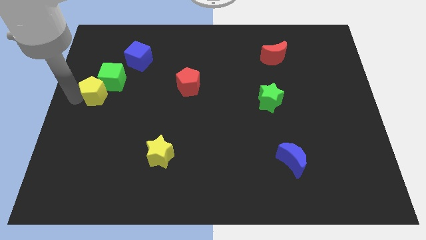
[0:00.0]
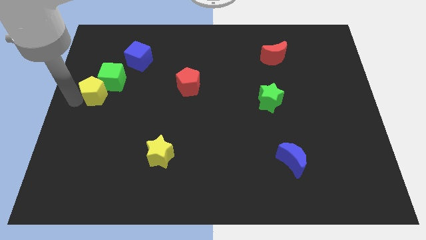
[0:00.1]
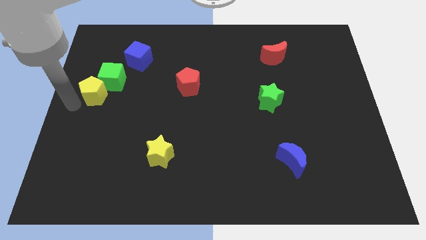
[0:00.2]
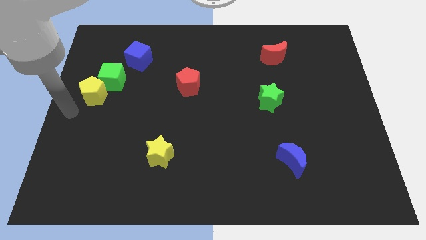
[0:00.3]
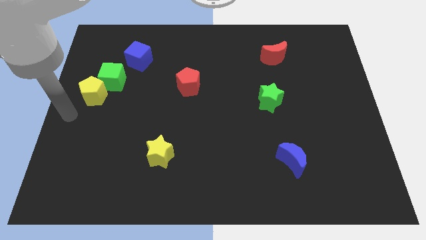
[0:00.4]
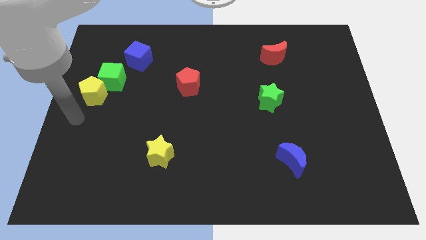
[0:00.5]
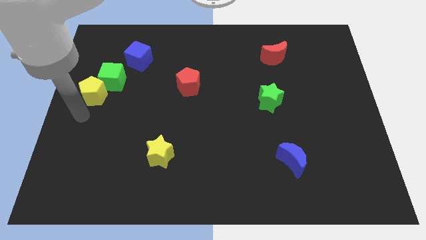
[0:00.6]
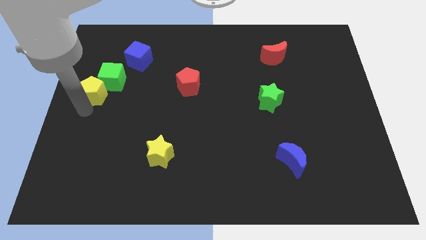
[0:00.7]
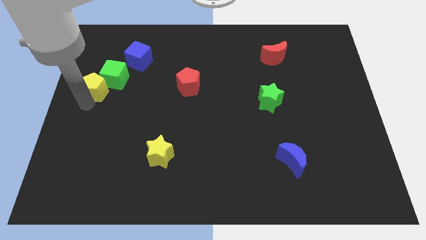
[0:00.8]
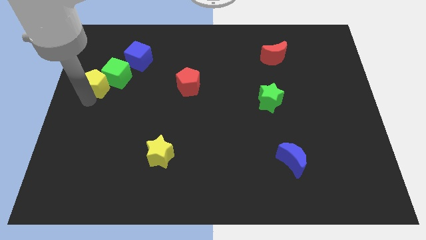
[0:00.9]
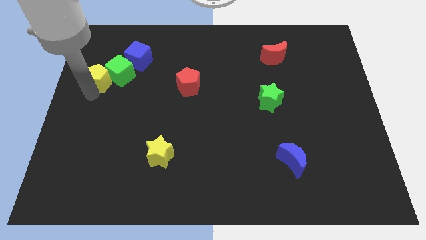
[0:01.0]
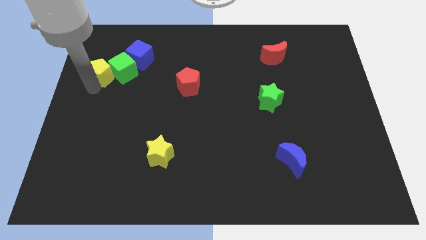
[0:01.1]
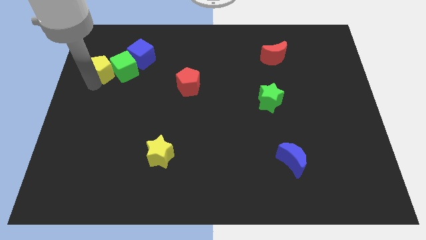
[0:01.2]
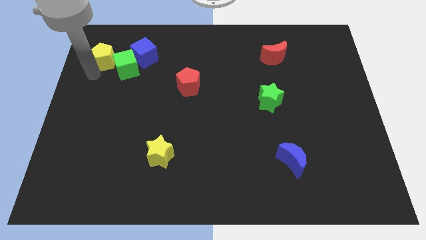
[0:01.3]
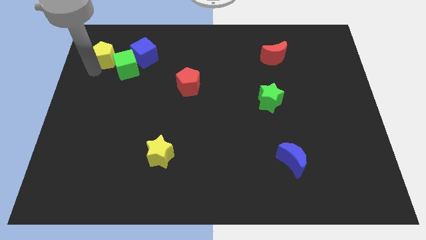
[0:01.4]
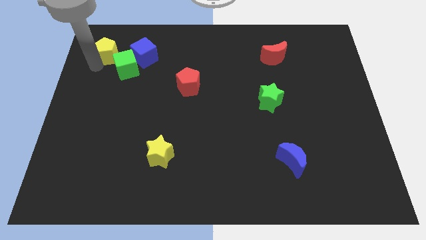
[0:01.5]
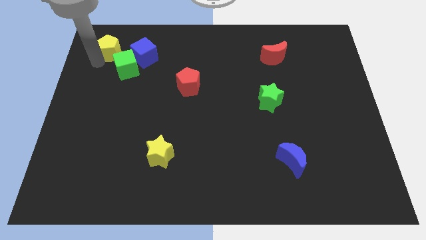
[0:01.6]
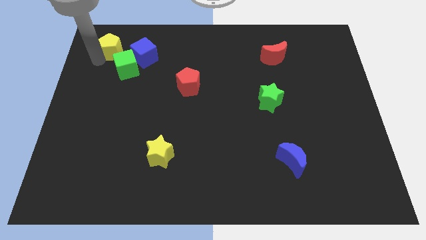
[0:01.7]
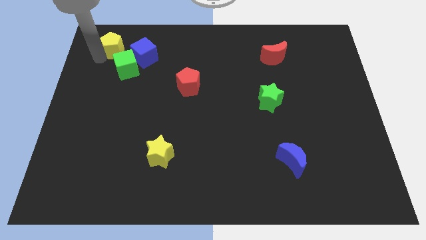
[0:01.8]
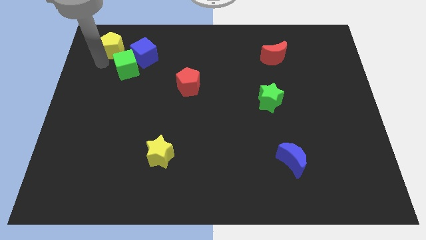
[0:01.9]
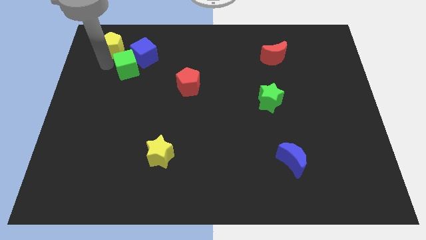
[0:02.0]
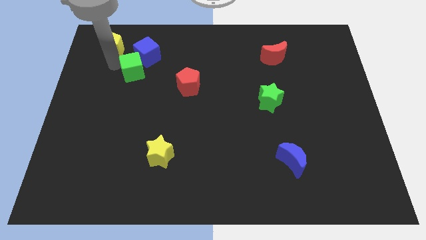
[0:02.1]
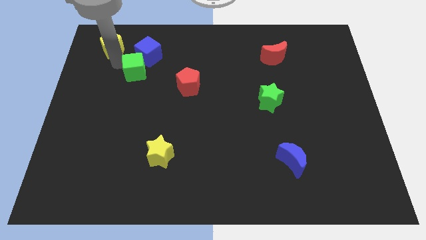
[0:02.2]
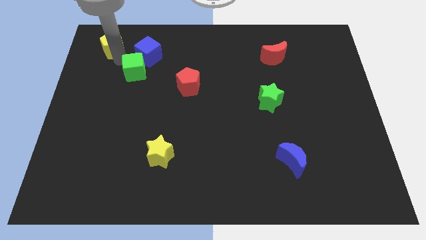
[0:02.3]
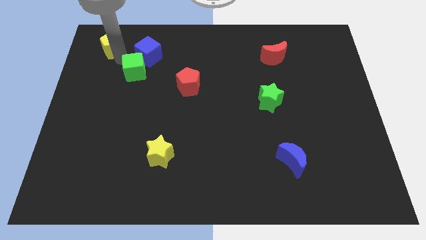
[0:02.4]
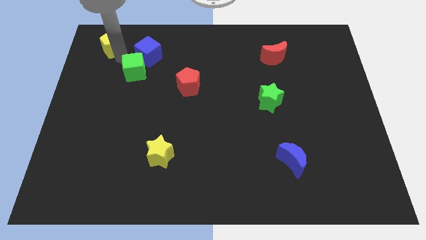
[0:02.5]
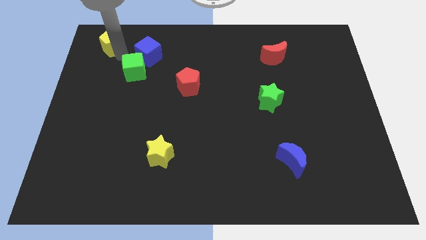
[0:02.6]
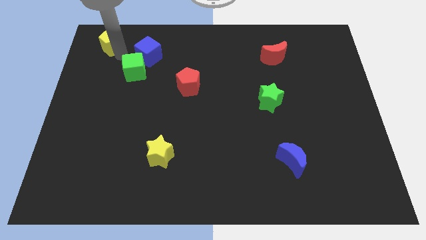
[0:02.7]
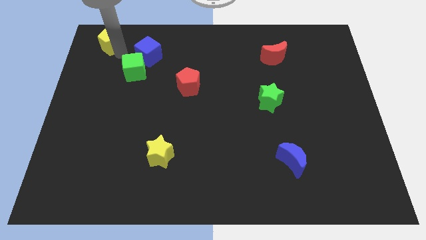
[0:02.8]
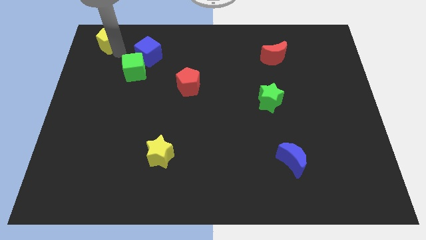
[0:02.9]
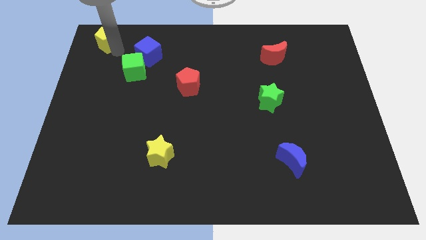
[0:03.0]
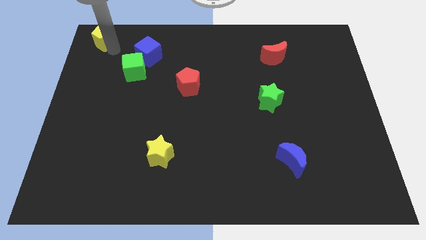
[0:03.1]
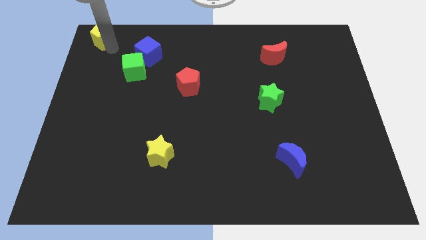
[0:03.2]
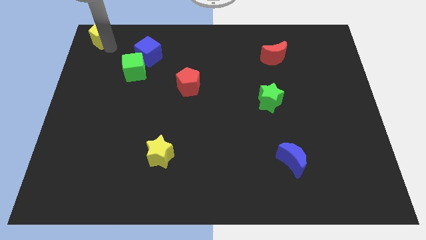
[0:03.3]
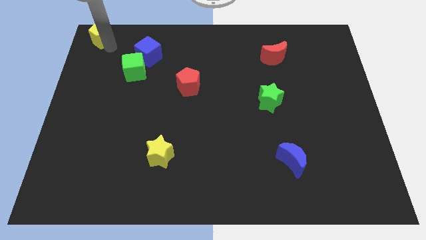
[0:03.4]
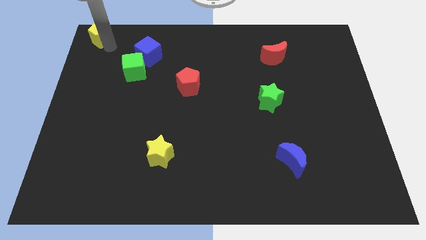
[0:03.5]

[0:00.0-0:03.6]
push the yellow pentagon to the top left corner

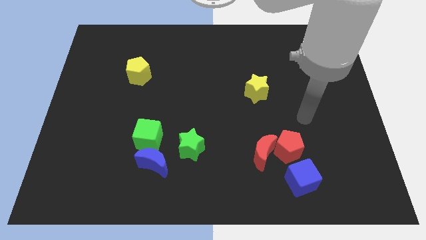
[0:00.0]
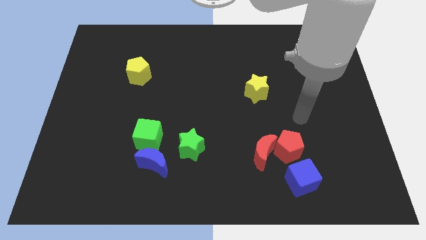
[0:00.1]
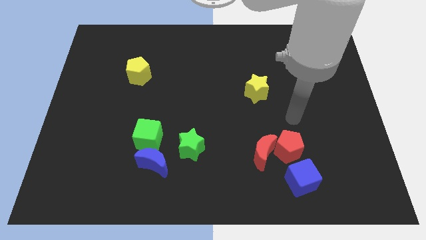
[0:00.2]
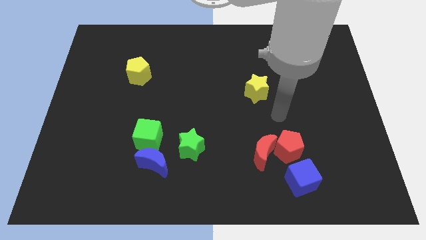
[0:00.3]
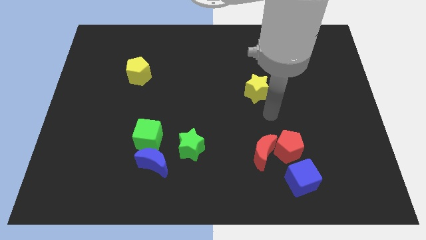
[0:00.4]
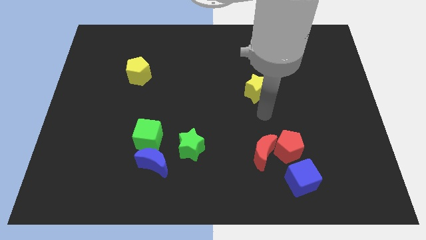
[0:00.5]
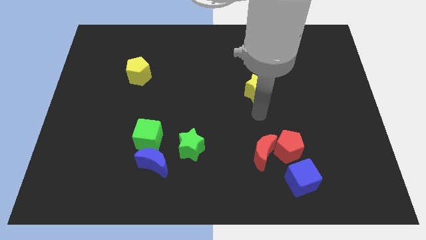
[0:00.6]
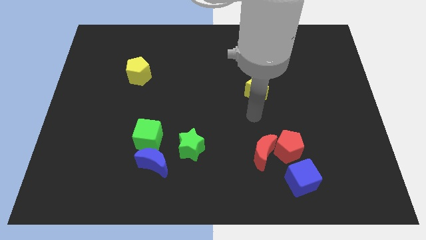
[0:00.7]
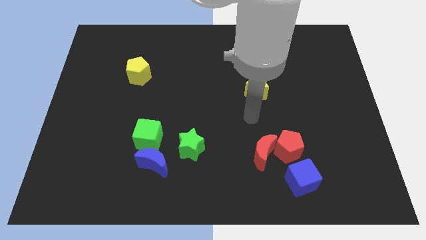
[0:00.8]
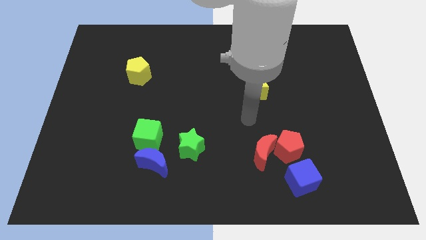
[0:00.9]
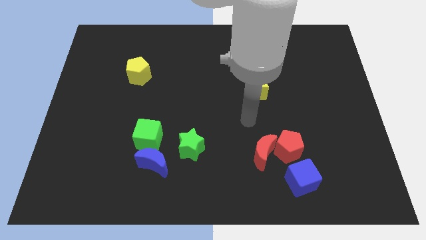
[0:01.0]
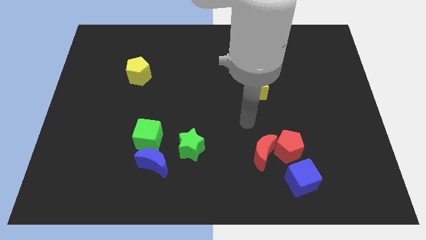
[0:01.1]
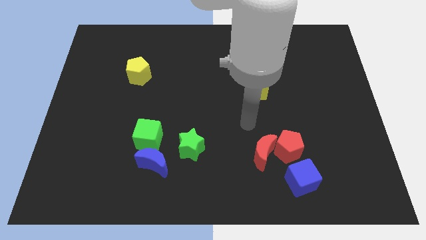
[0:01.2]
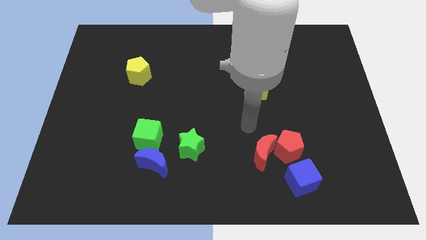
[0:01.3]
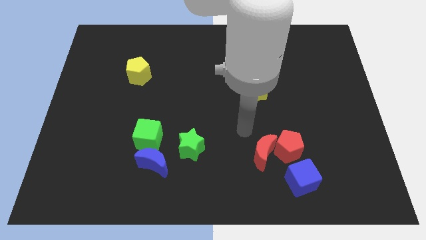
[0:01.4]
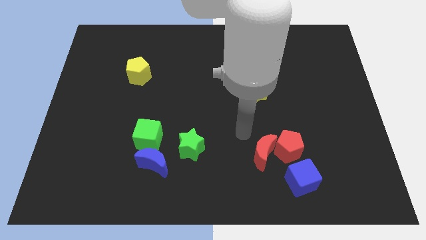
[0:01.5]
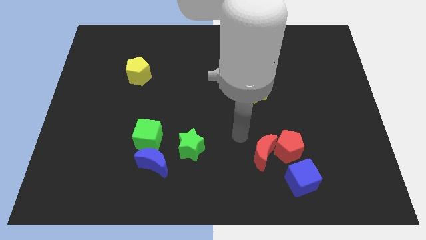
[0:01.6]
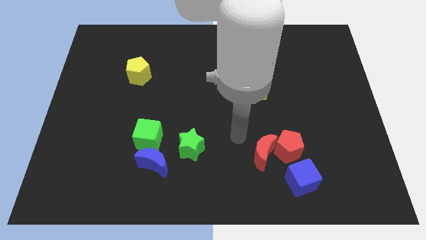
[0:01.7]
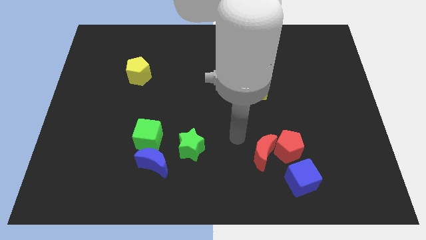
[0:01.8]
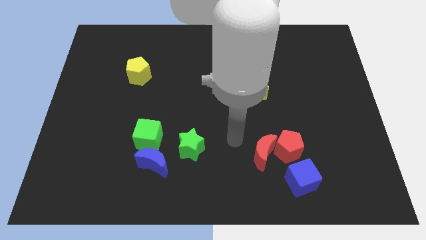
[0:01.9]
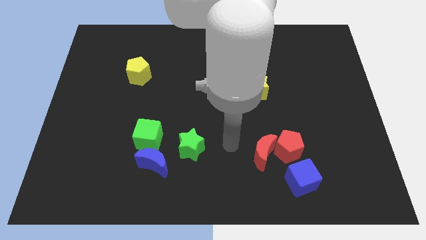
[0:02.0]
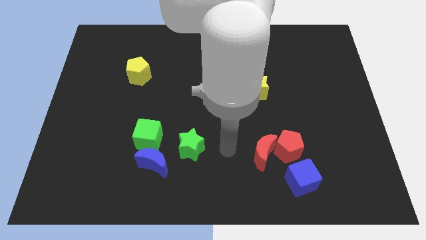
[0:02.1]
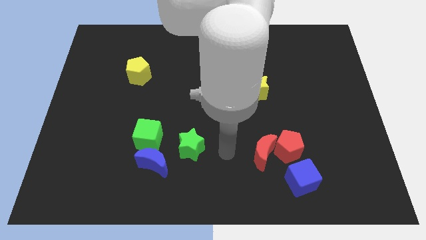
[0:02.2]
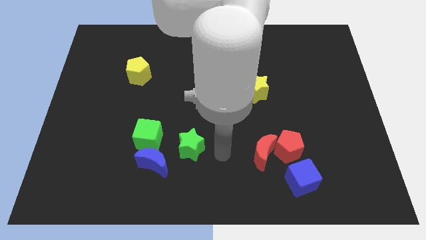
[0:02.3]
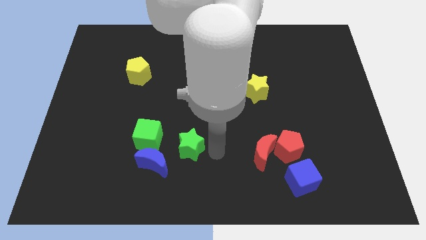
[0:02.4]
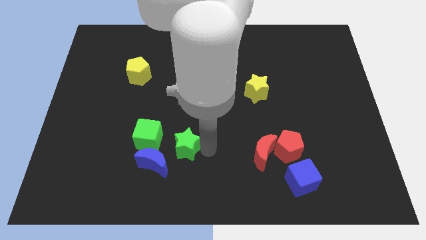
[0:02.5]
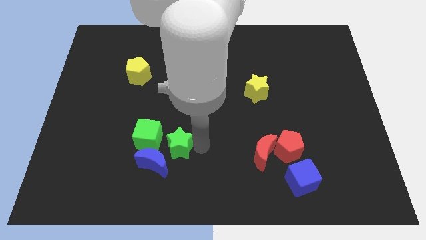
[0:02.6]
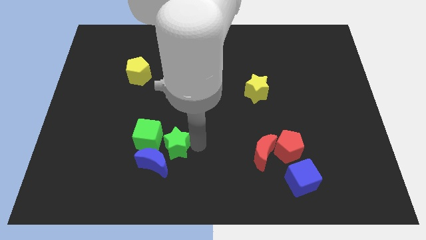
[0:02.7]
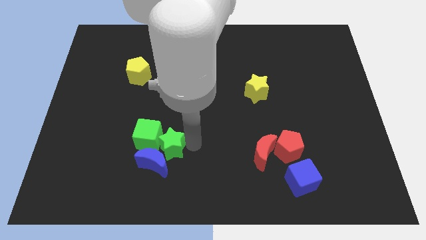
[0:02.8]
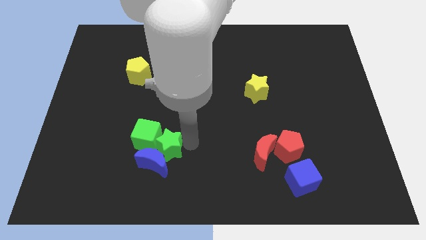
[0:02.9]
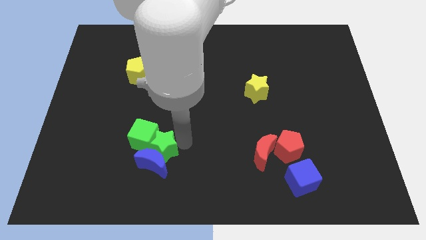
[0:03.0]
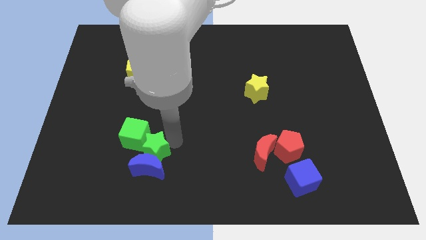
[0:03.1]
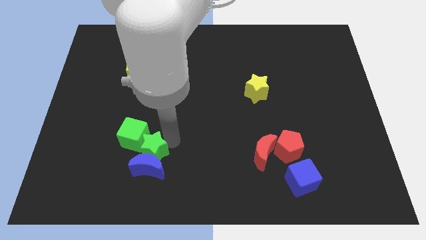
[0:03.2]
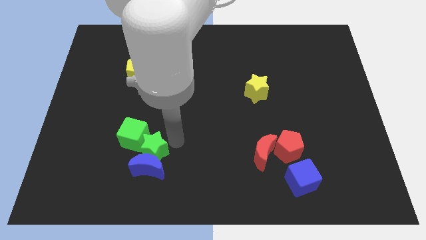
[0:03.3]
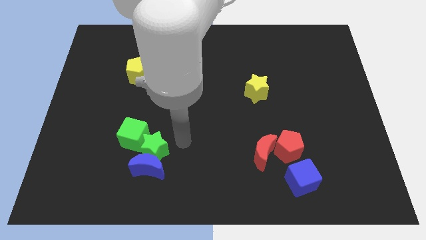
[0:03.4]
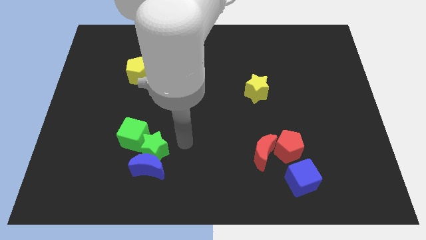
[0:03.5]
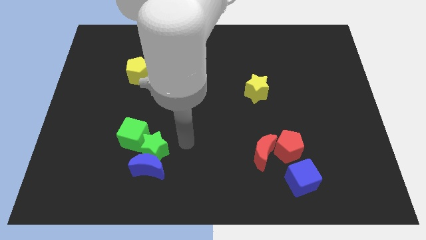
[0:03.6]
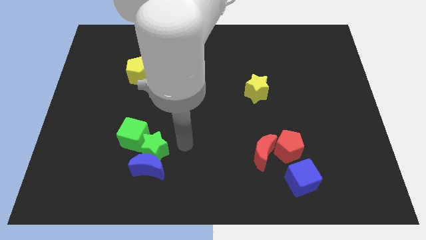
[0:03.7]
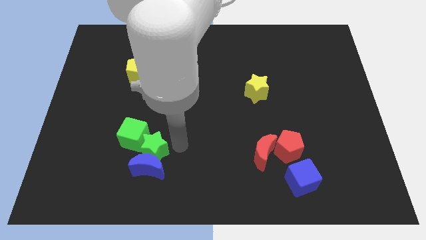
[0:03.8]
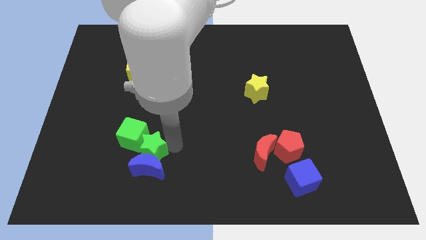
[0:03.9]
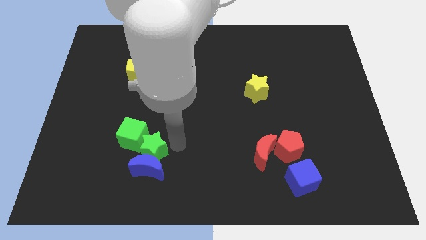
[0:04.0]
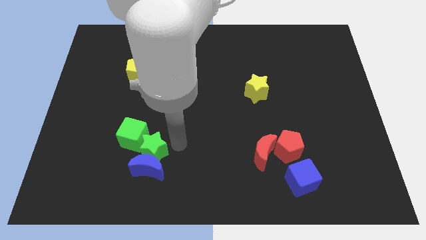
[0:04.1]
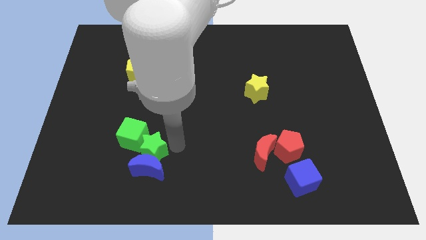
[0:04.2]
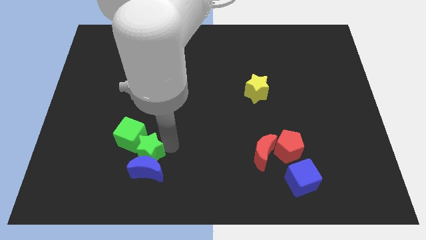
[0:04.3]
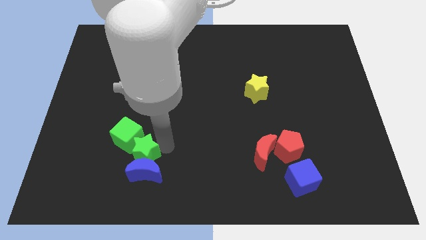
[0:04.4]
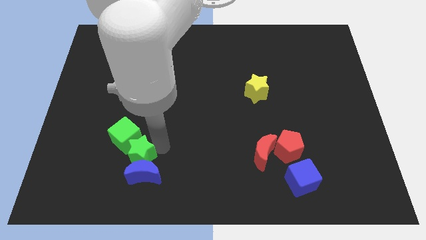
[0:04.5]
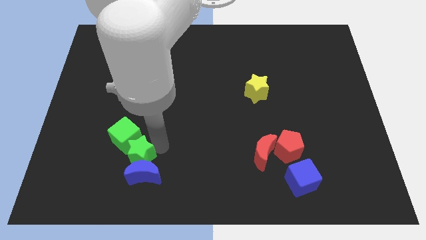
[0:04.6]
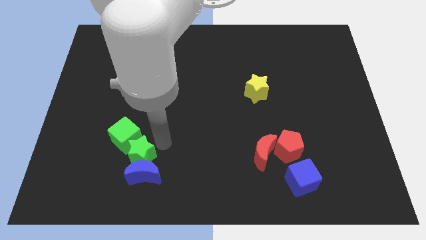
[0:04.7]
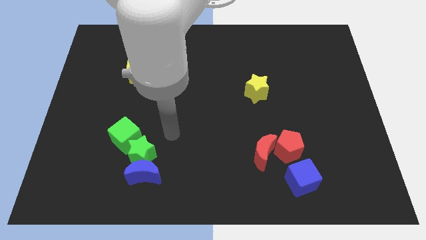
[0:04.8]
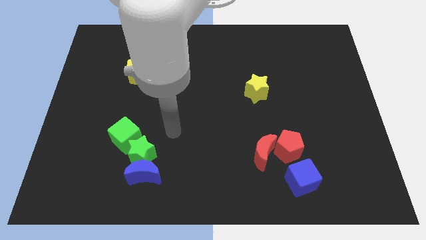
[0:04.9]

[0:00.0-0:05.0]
place the green star to the top side of the blue moon

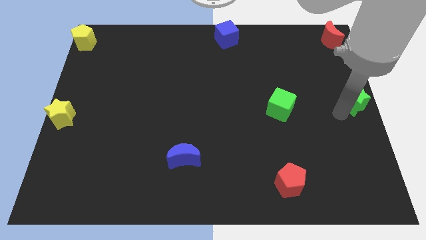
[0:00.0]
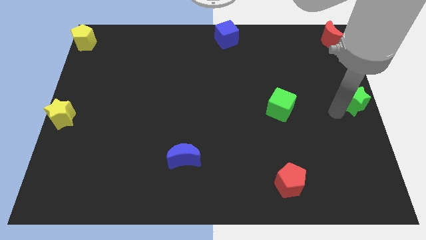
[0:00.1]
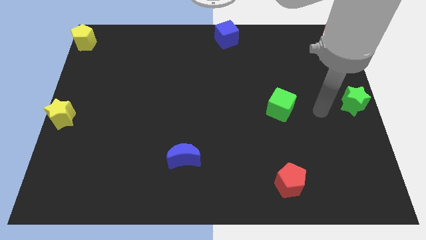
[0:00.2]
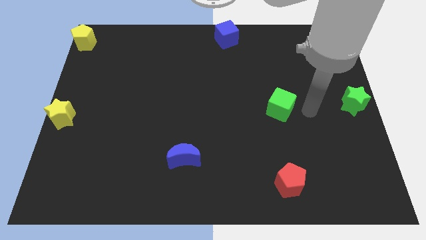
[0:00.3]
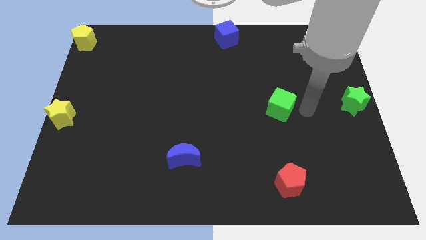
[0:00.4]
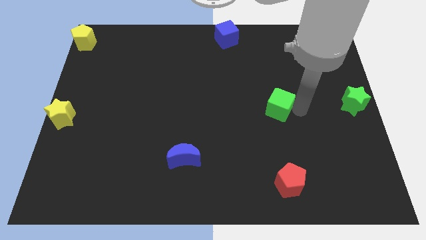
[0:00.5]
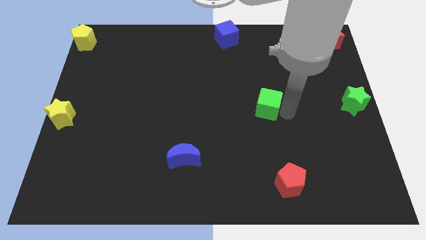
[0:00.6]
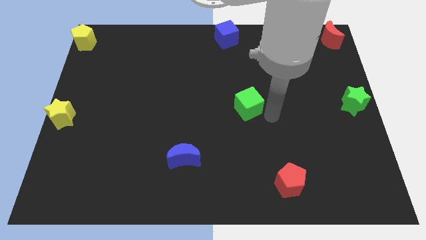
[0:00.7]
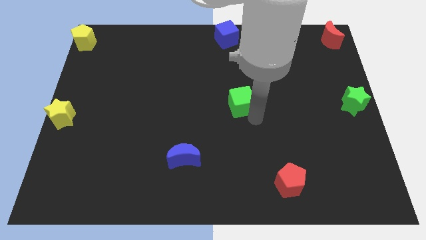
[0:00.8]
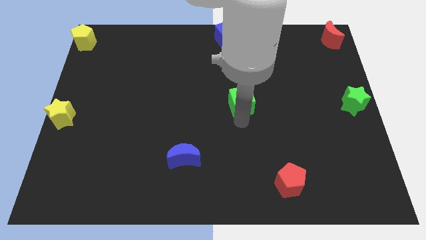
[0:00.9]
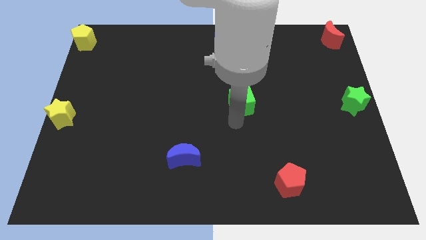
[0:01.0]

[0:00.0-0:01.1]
place green cube at the center of the board
